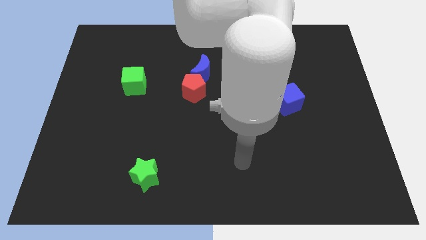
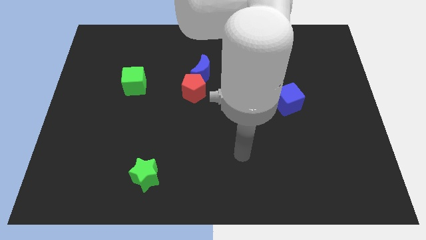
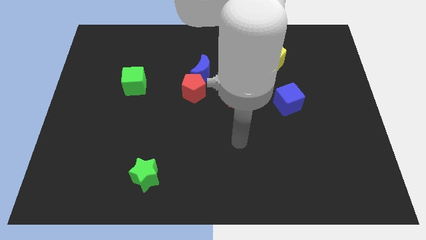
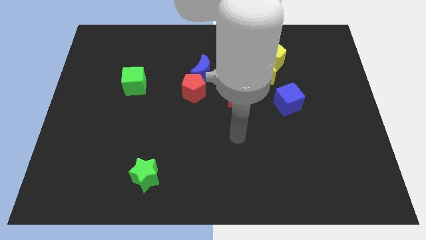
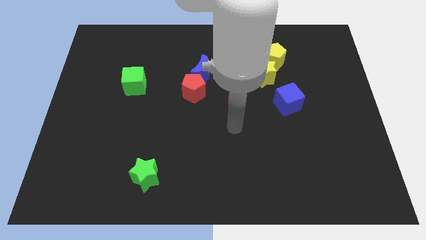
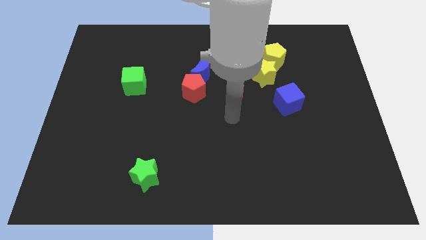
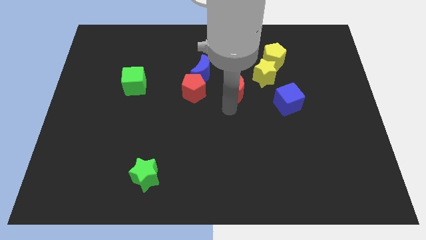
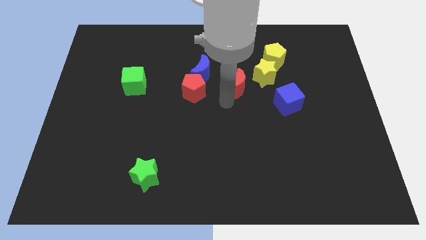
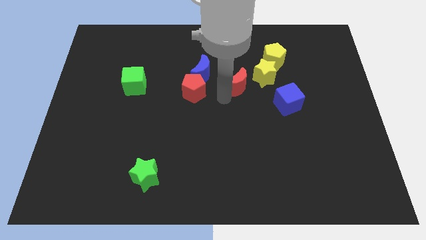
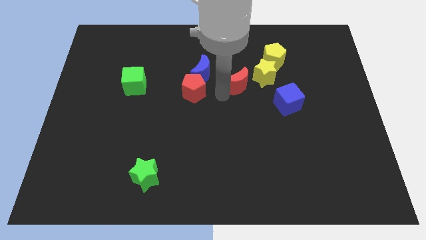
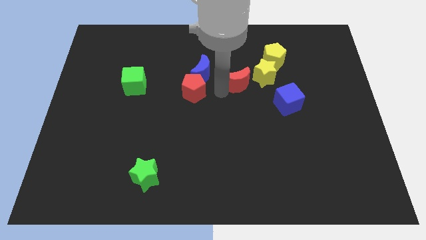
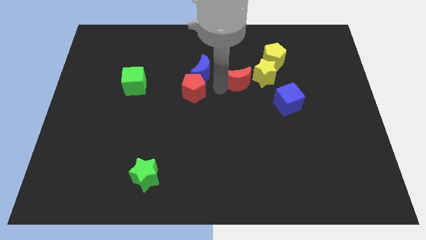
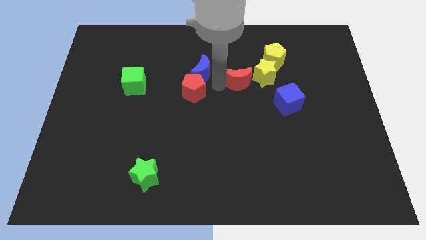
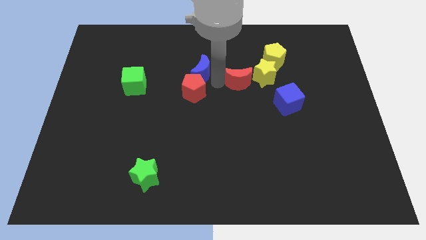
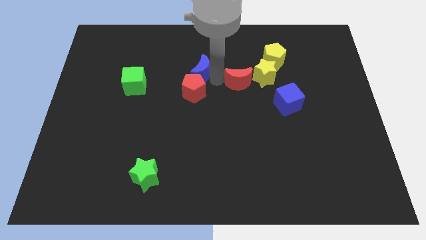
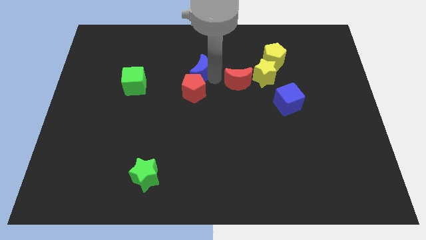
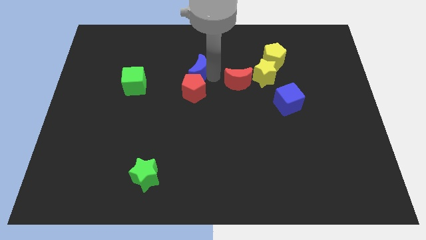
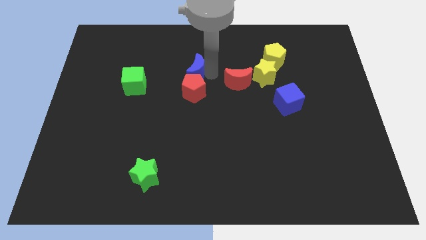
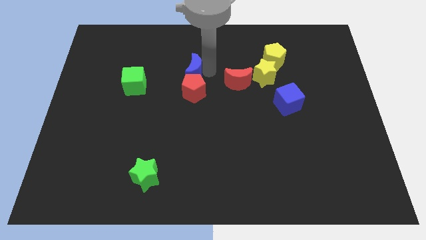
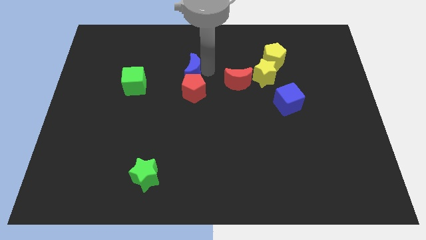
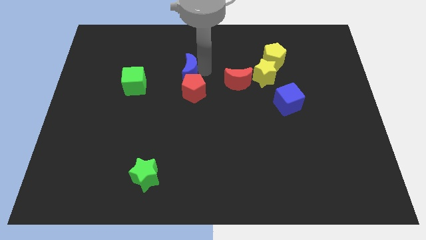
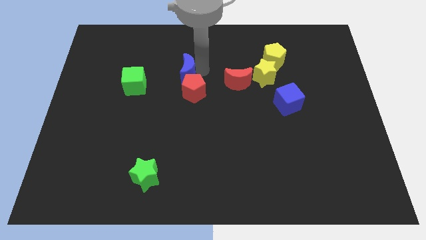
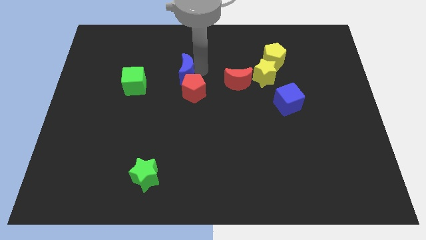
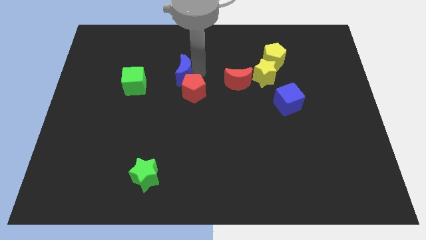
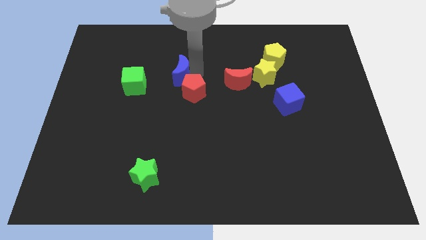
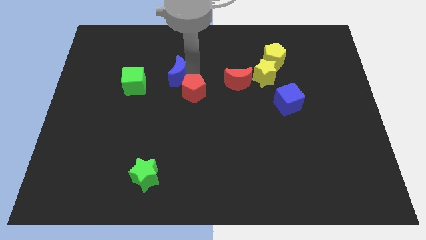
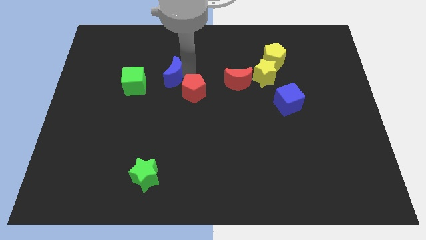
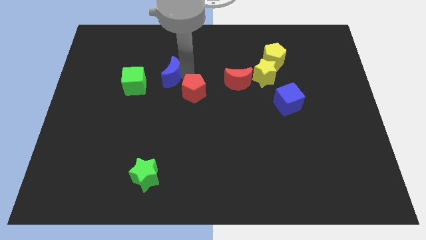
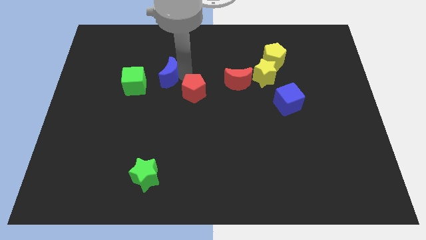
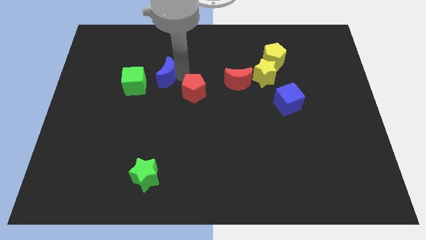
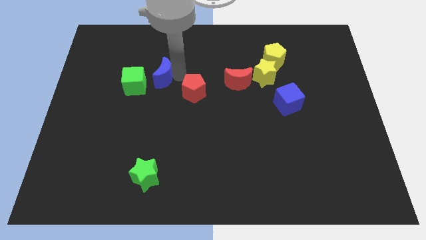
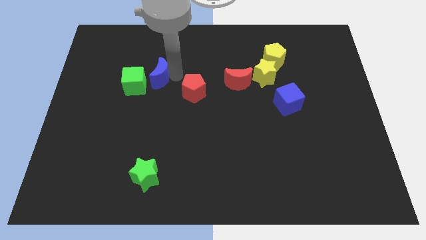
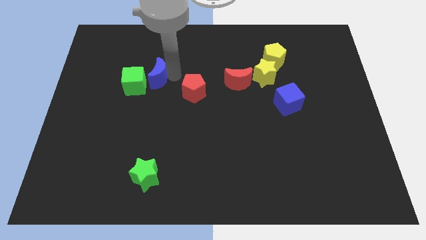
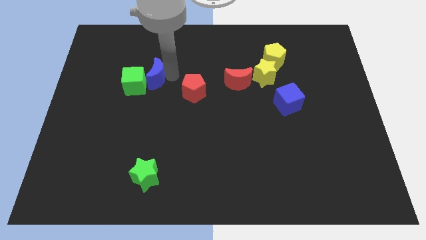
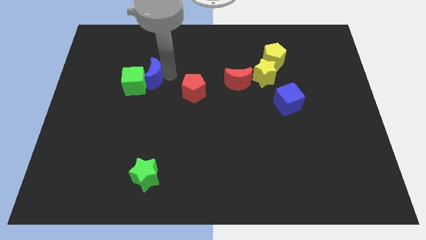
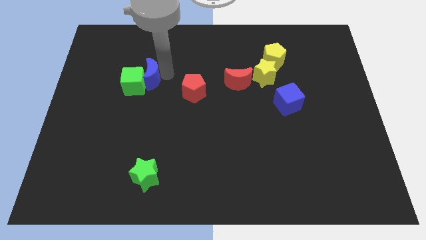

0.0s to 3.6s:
push the blue moon next to the green cube

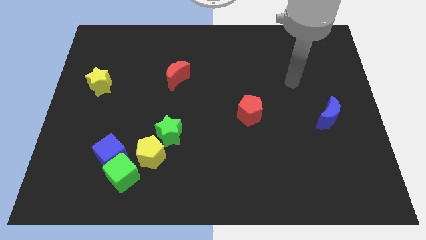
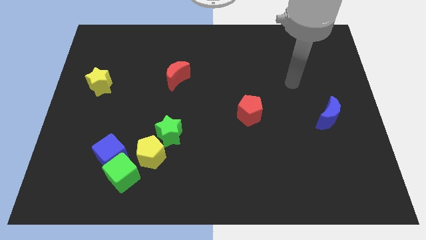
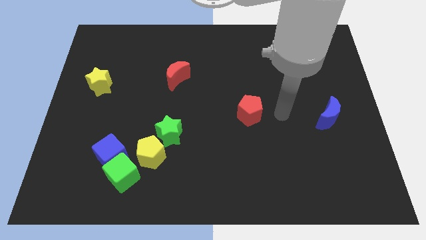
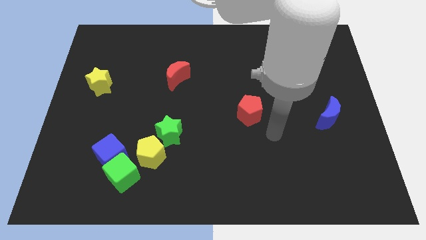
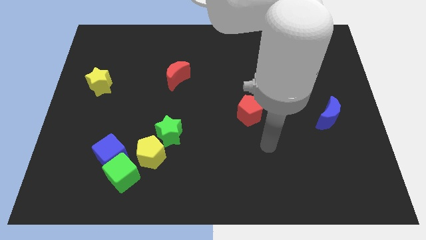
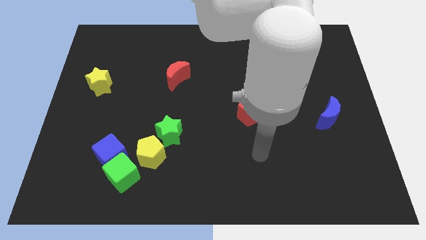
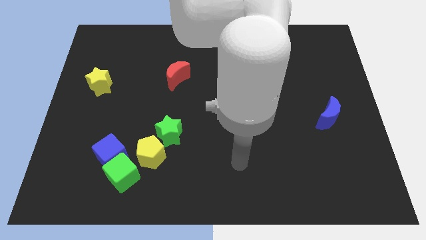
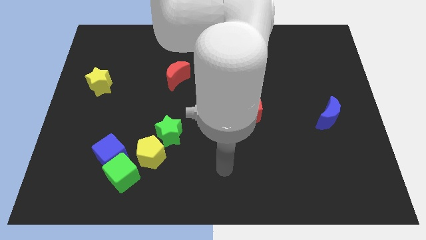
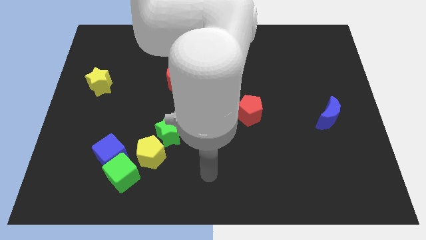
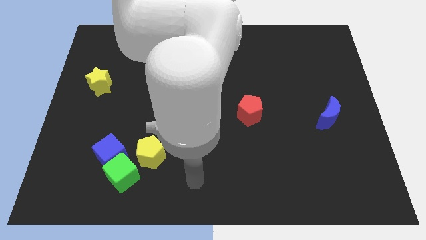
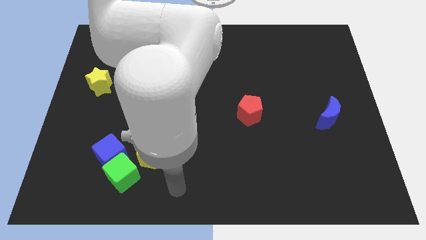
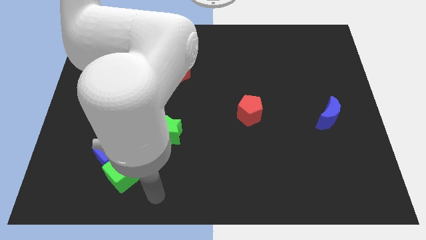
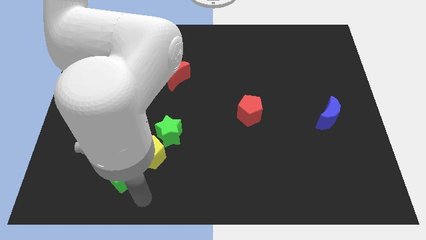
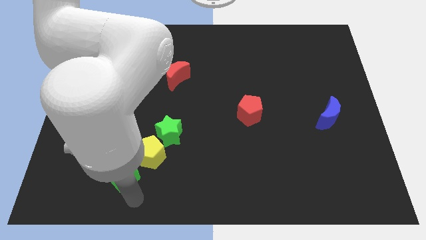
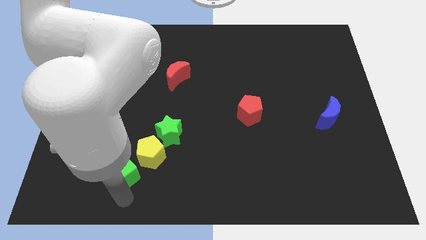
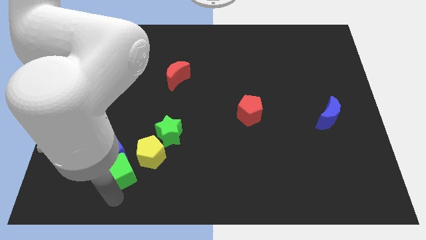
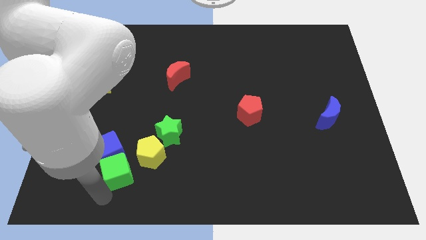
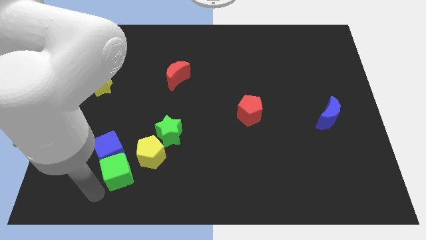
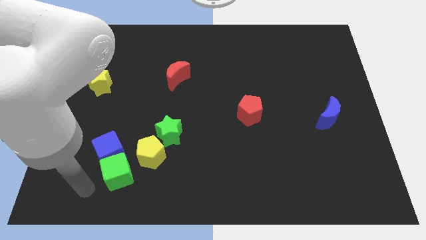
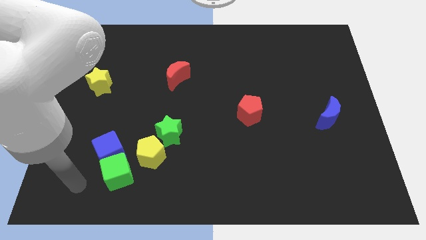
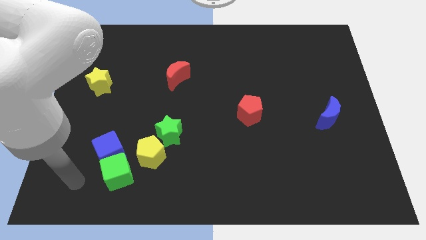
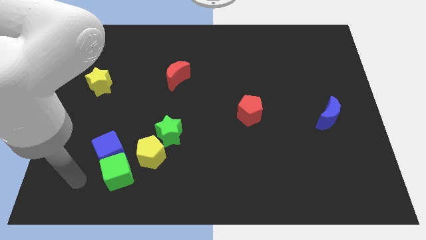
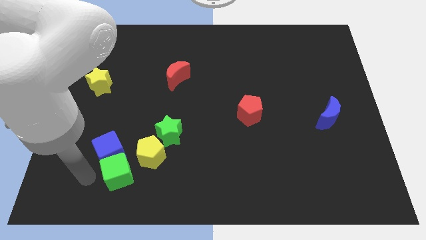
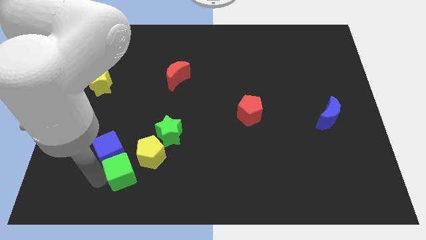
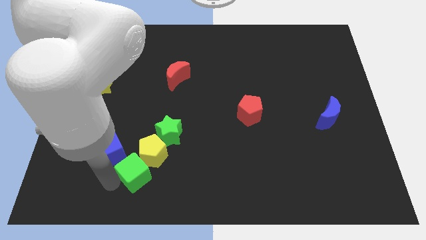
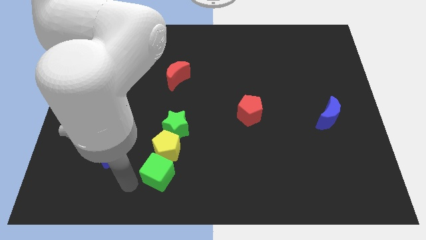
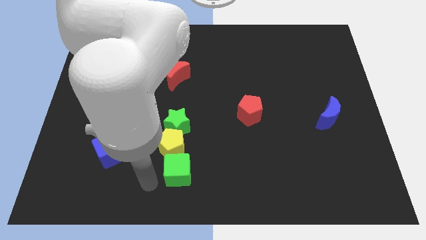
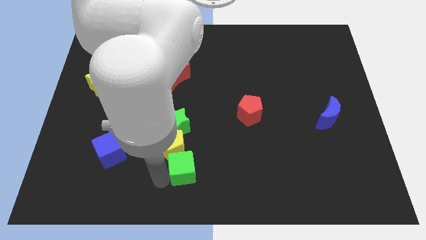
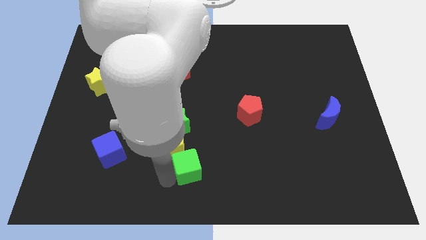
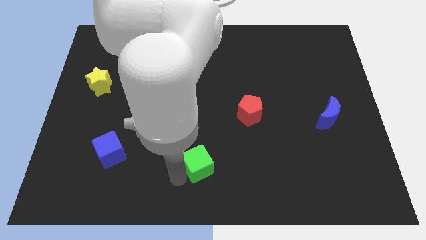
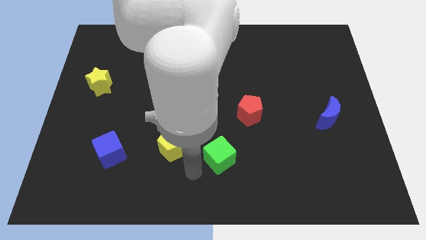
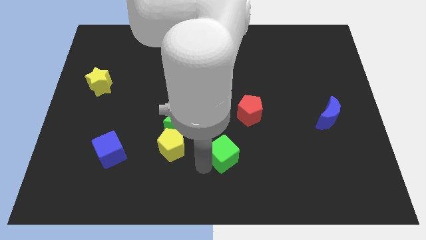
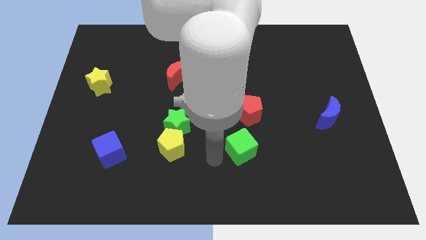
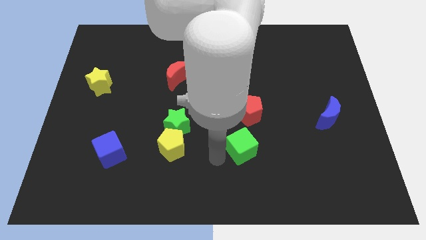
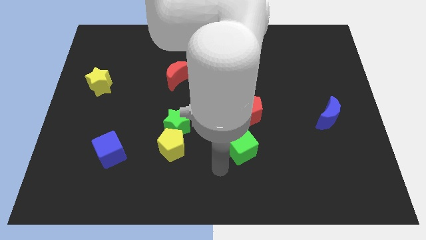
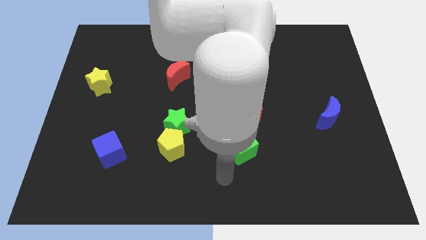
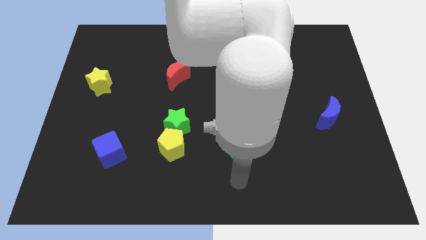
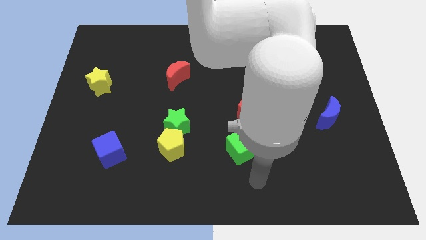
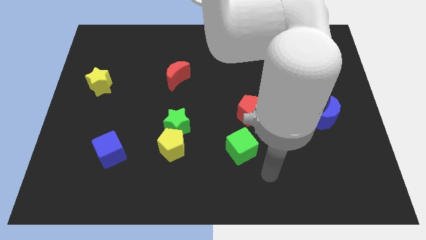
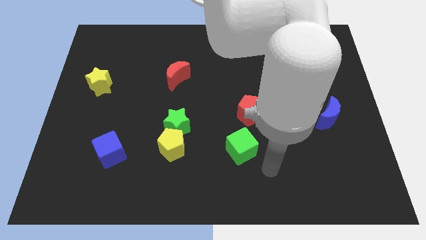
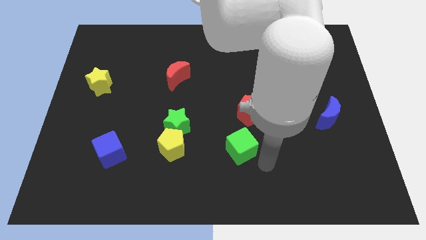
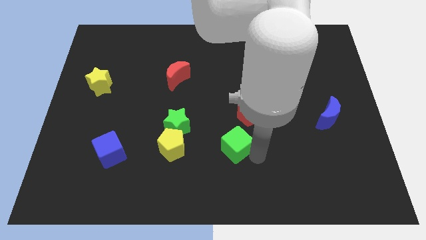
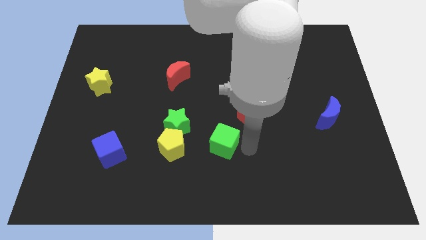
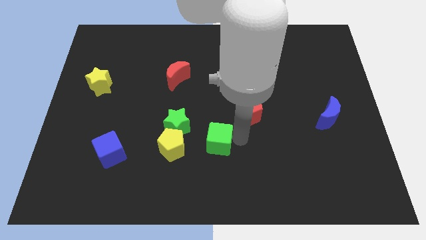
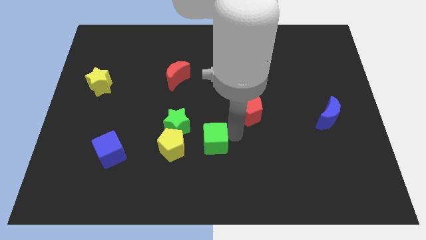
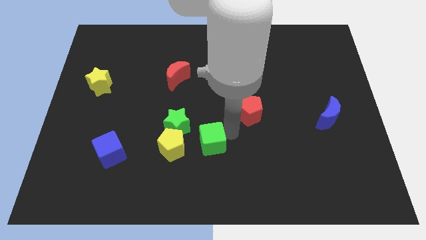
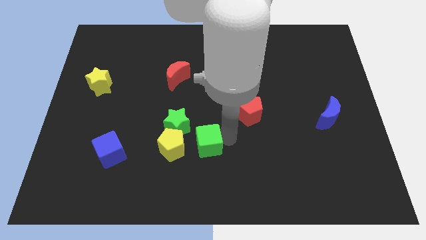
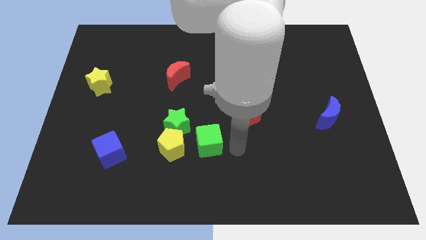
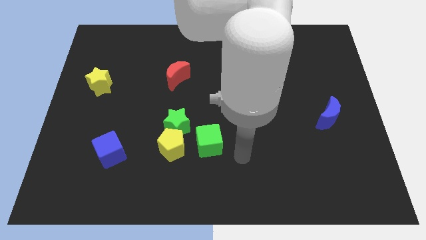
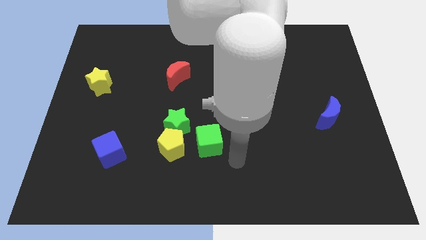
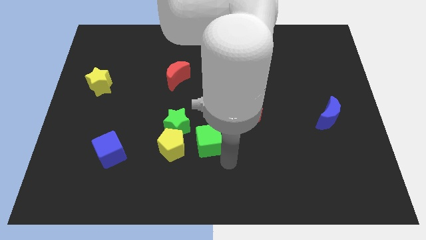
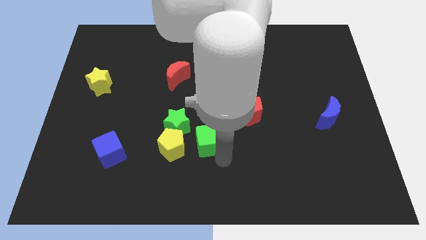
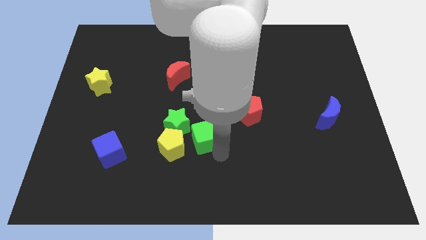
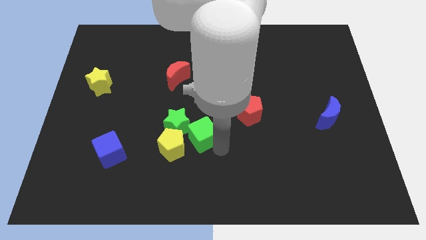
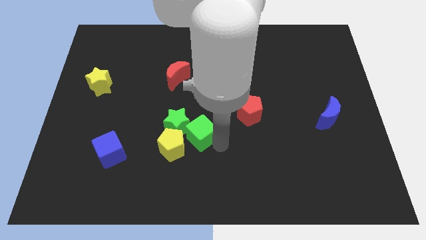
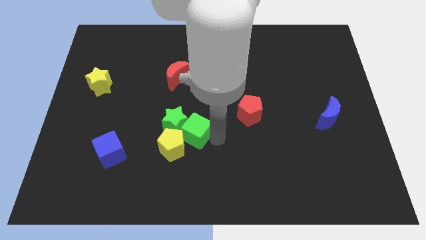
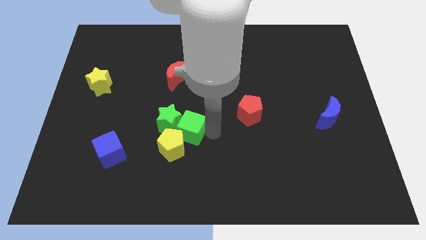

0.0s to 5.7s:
put the green cube next to the green star
